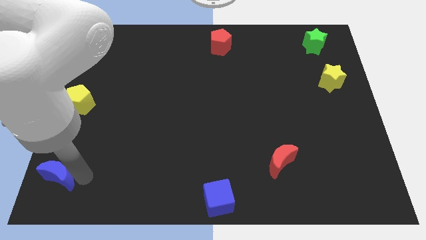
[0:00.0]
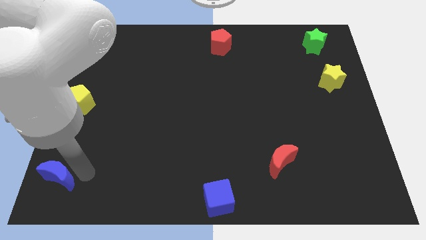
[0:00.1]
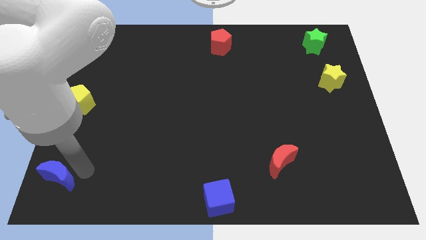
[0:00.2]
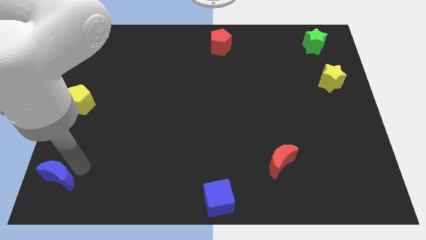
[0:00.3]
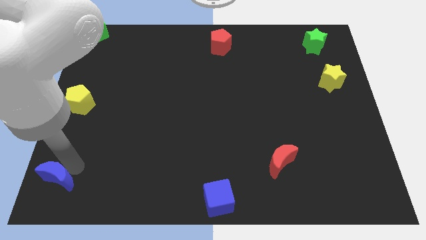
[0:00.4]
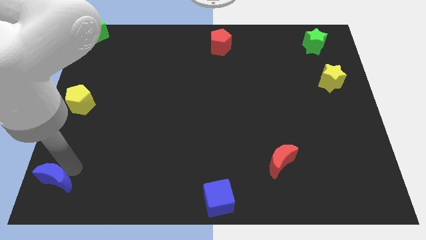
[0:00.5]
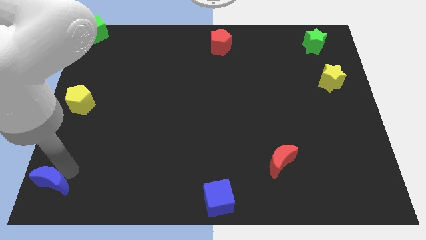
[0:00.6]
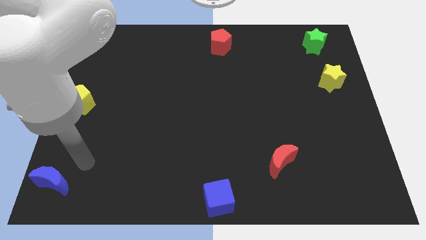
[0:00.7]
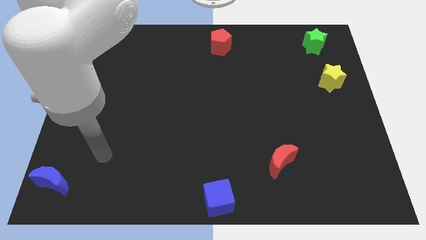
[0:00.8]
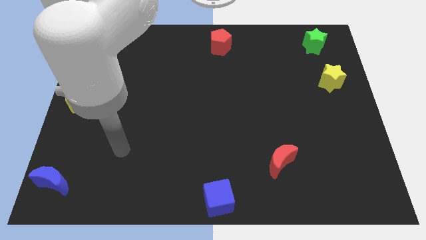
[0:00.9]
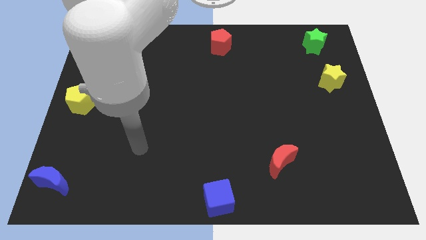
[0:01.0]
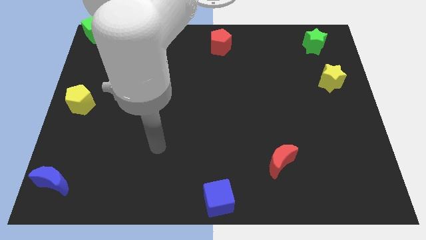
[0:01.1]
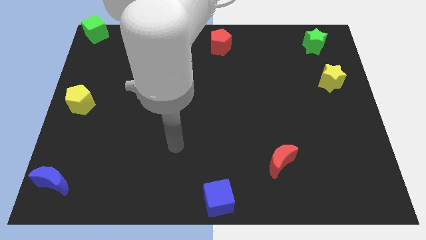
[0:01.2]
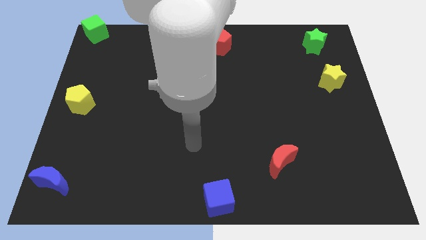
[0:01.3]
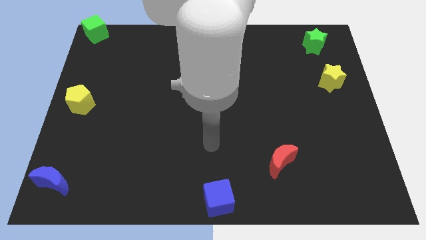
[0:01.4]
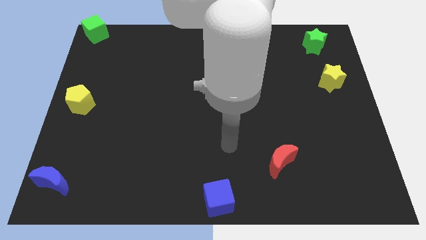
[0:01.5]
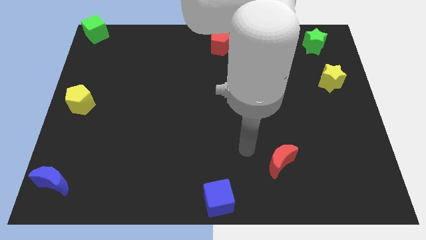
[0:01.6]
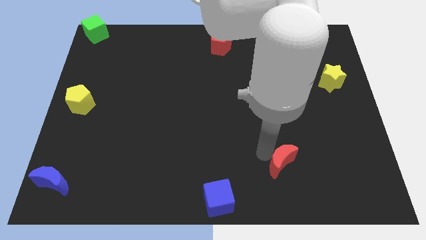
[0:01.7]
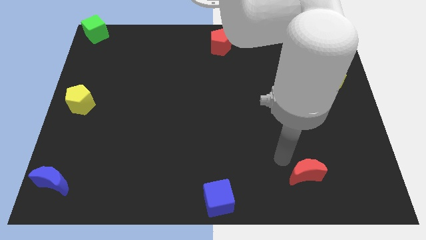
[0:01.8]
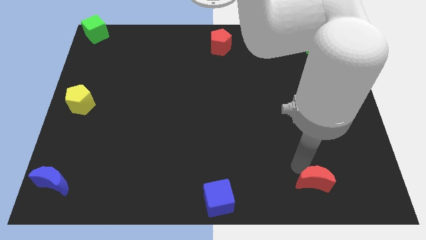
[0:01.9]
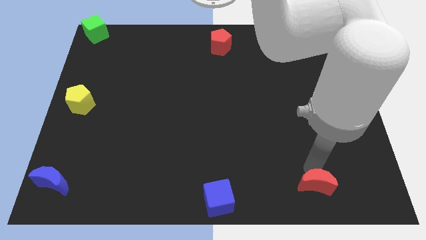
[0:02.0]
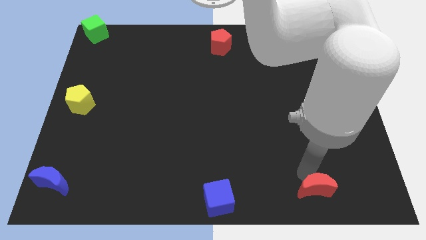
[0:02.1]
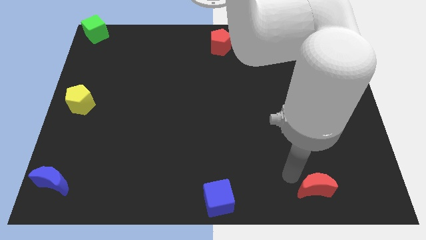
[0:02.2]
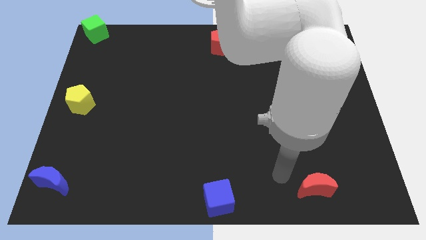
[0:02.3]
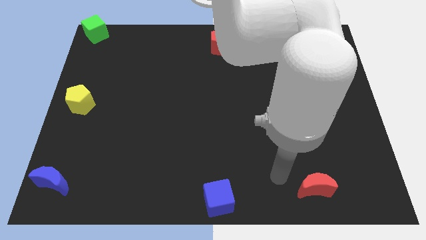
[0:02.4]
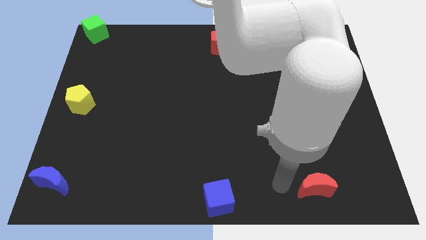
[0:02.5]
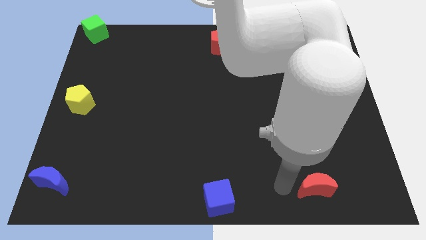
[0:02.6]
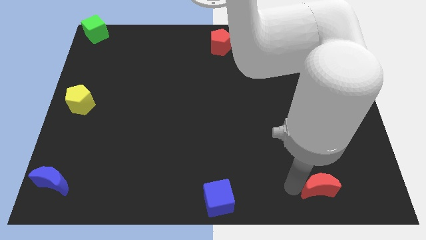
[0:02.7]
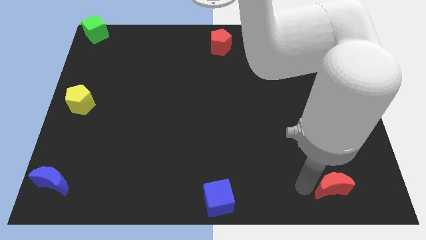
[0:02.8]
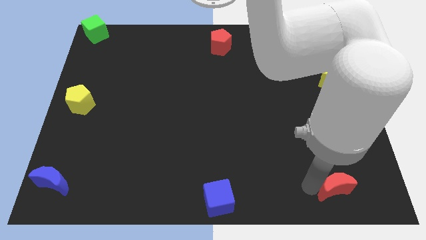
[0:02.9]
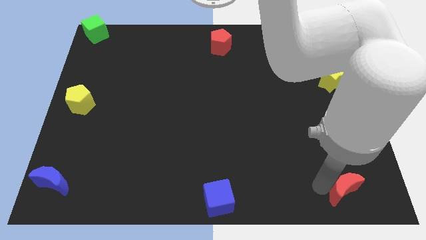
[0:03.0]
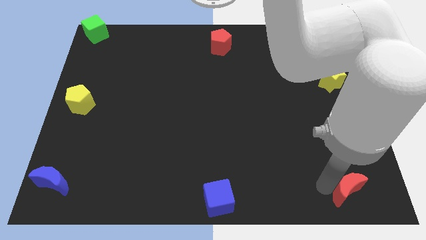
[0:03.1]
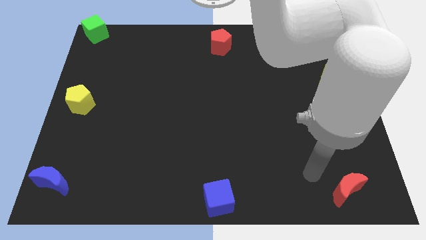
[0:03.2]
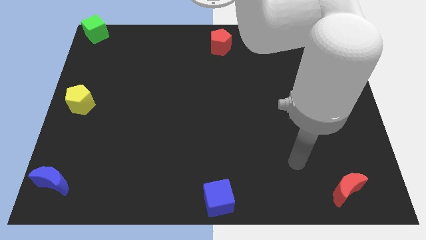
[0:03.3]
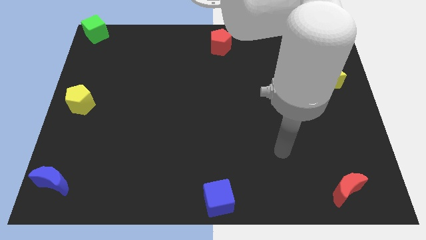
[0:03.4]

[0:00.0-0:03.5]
move red crescent towards the bottom right corner of the board

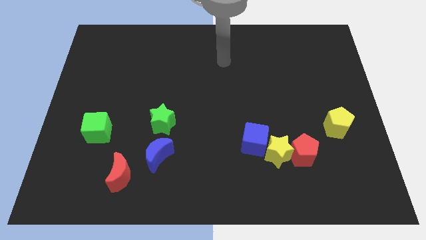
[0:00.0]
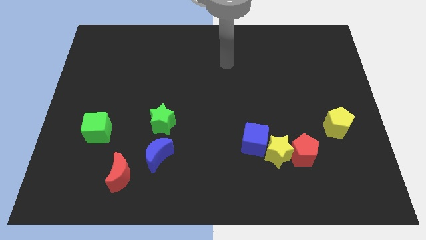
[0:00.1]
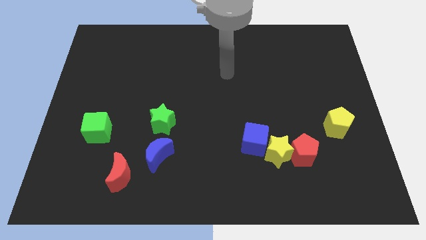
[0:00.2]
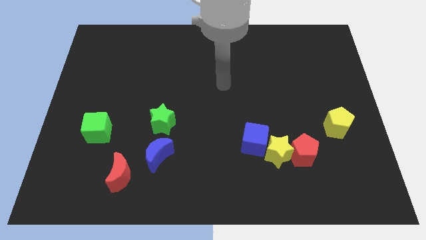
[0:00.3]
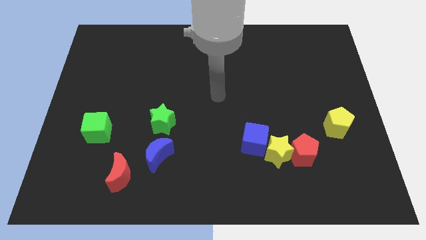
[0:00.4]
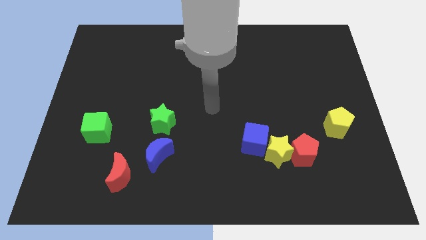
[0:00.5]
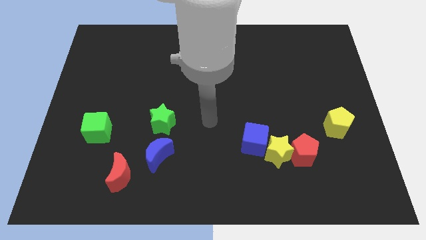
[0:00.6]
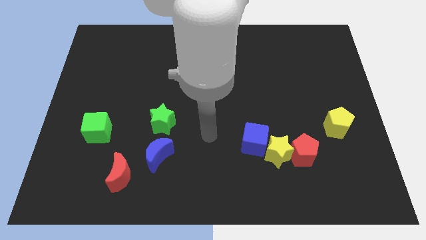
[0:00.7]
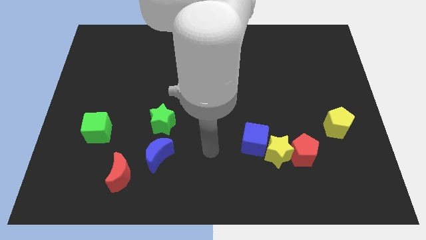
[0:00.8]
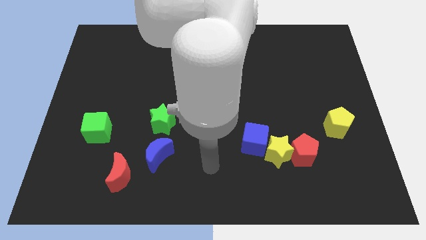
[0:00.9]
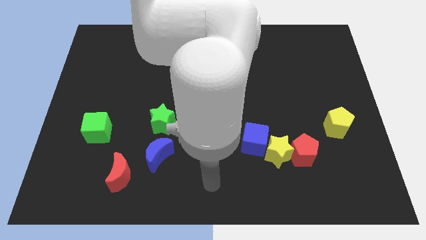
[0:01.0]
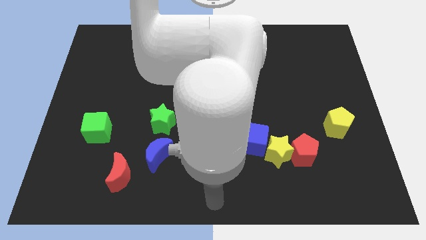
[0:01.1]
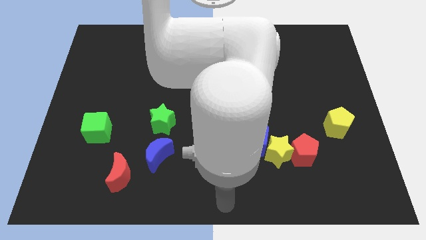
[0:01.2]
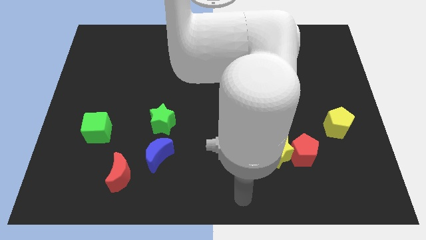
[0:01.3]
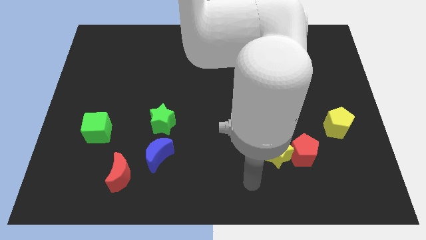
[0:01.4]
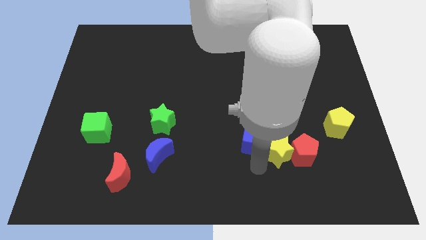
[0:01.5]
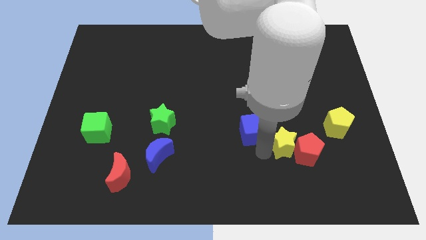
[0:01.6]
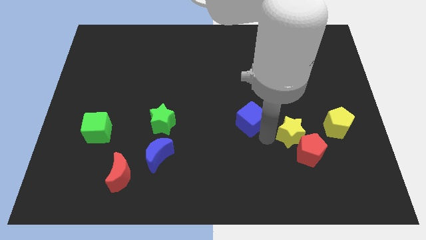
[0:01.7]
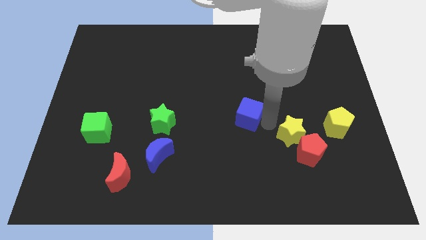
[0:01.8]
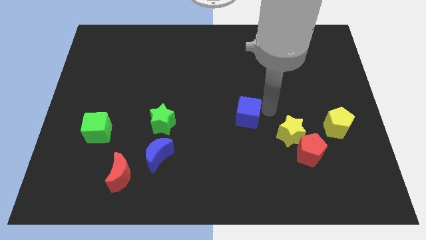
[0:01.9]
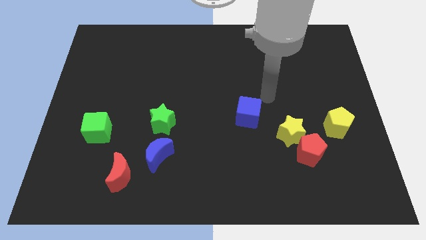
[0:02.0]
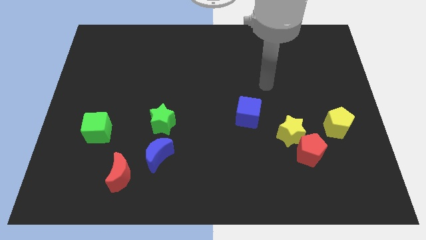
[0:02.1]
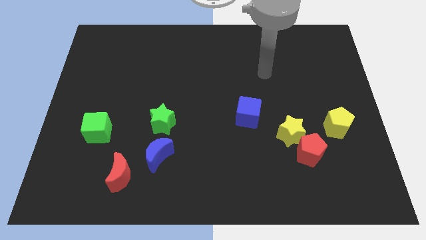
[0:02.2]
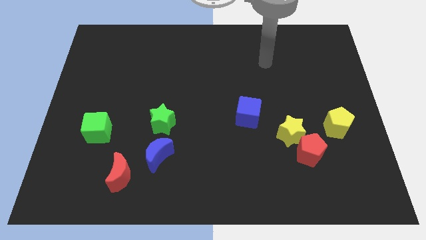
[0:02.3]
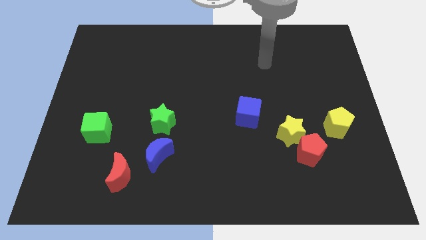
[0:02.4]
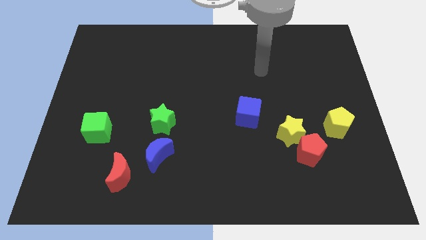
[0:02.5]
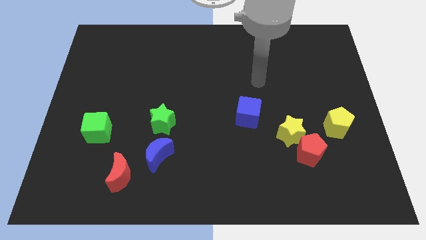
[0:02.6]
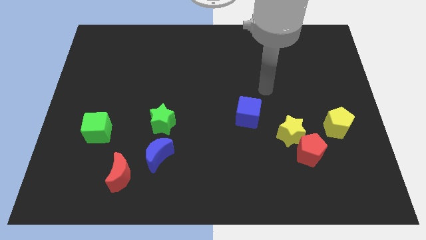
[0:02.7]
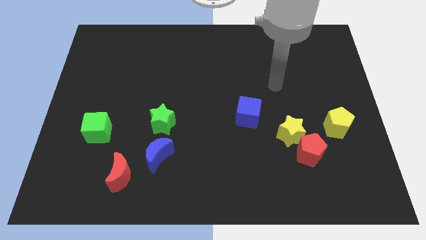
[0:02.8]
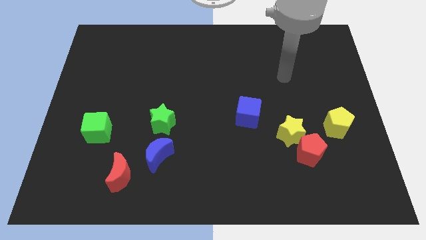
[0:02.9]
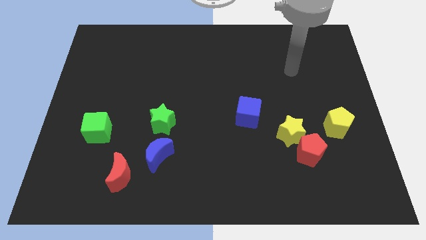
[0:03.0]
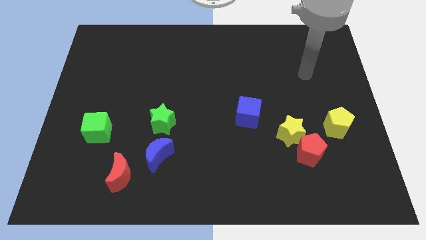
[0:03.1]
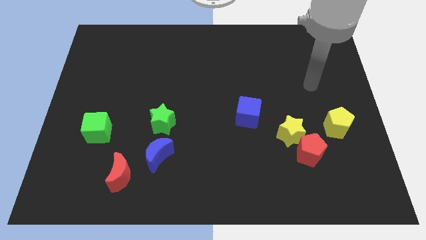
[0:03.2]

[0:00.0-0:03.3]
separate the blue cube and yellow star

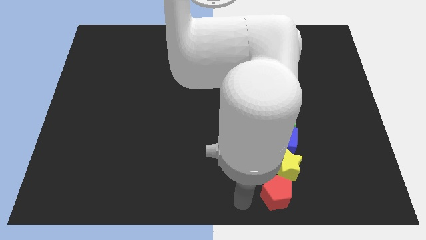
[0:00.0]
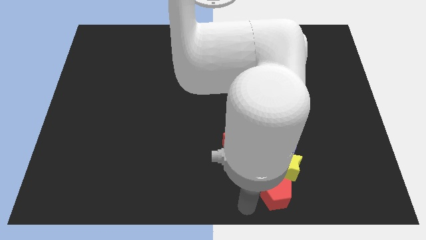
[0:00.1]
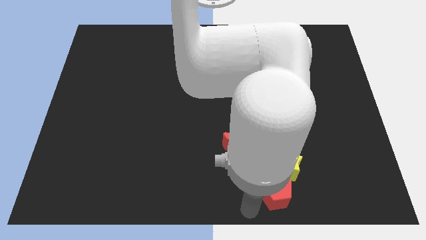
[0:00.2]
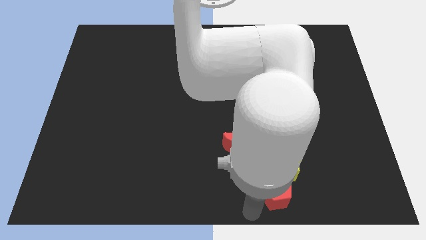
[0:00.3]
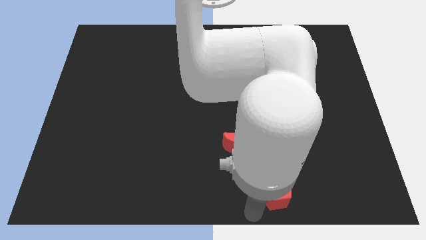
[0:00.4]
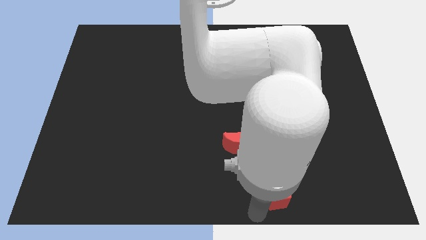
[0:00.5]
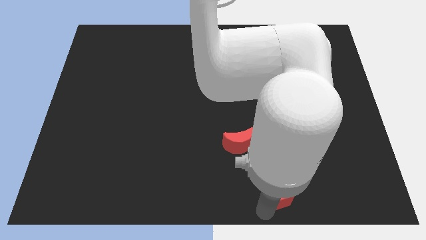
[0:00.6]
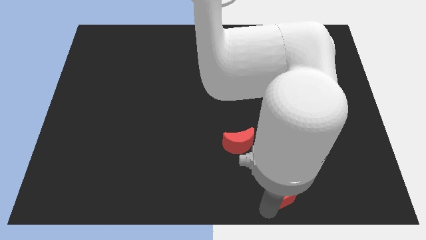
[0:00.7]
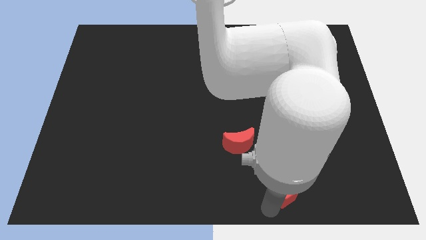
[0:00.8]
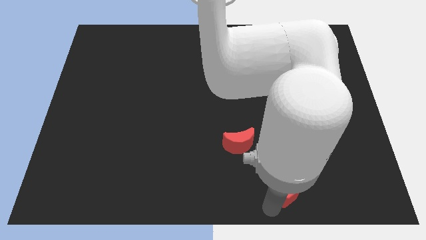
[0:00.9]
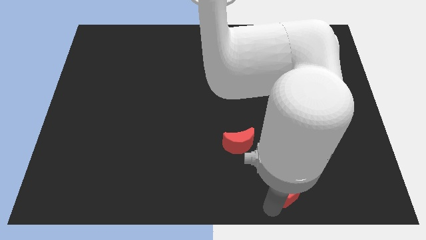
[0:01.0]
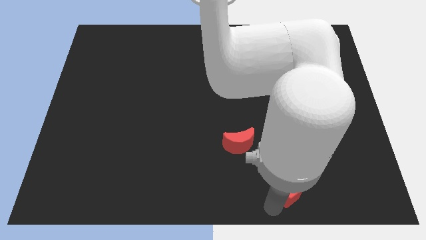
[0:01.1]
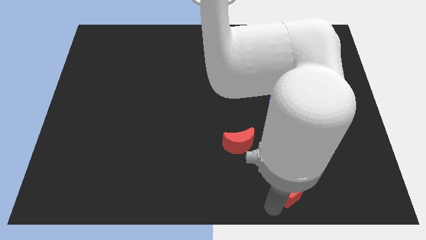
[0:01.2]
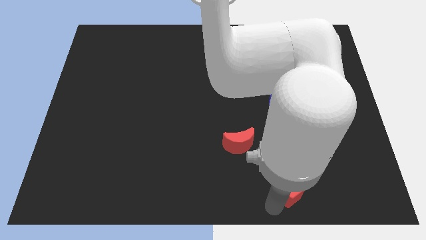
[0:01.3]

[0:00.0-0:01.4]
place red pentagon below yellow star

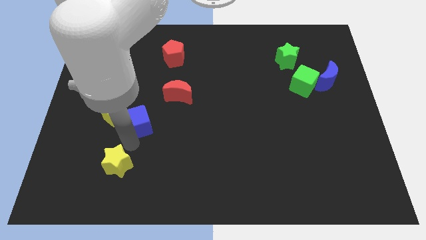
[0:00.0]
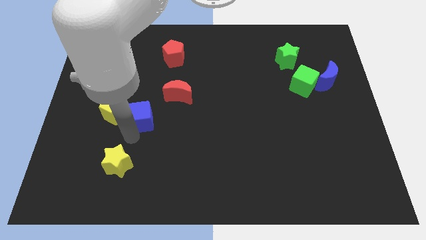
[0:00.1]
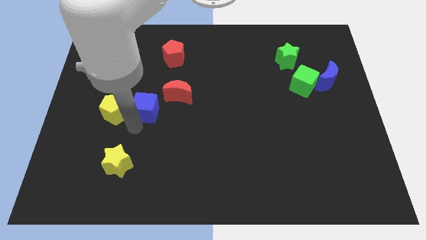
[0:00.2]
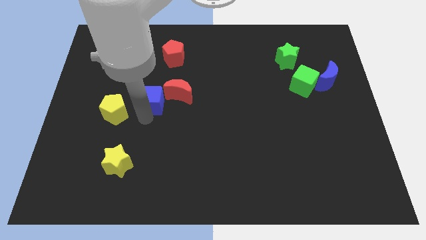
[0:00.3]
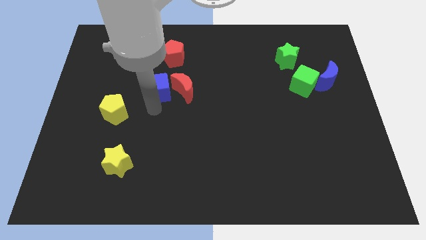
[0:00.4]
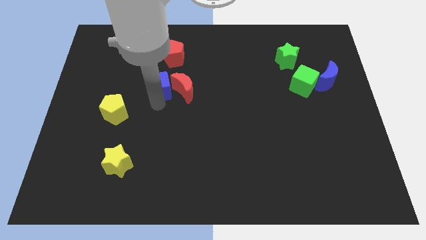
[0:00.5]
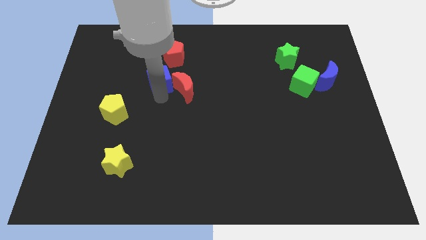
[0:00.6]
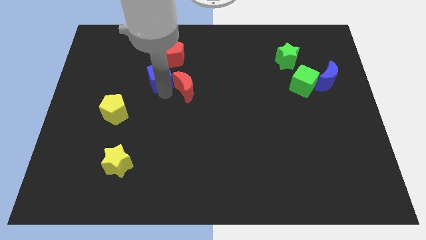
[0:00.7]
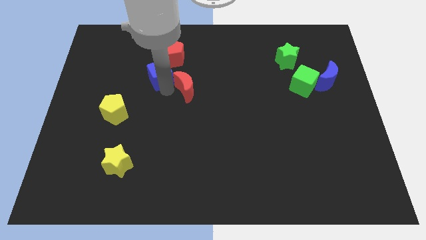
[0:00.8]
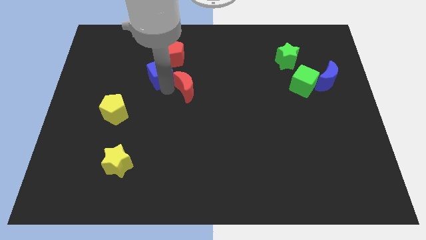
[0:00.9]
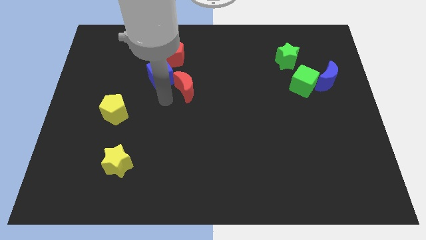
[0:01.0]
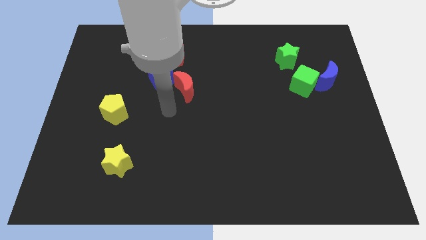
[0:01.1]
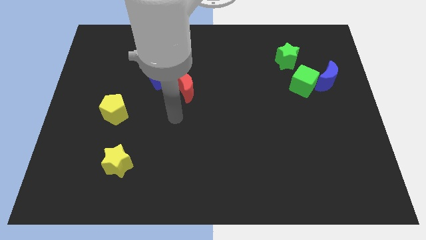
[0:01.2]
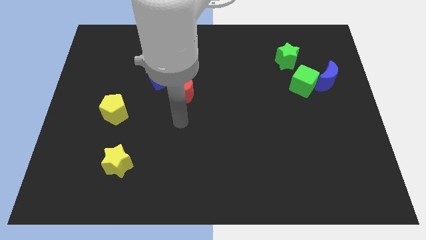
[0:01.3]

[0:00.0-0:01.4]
move the blue cube into the red moon
